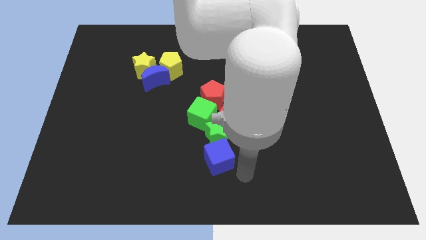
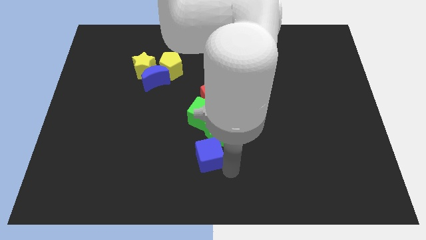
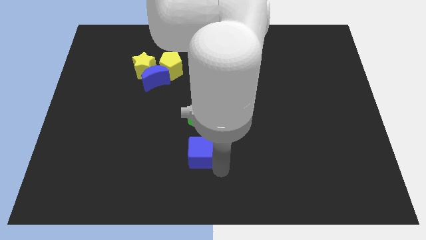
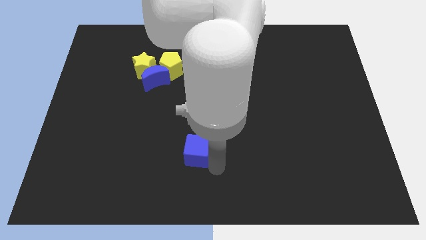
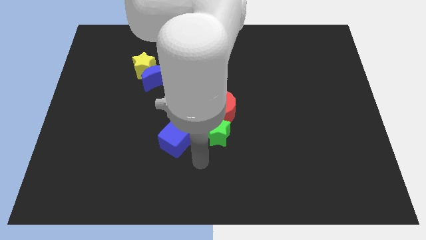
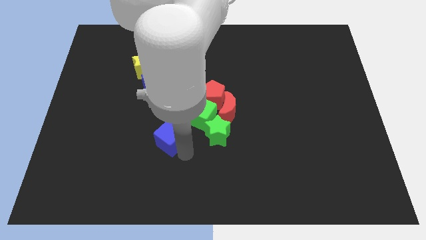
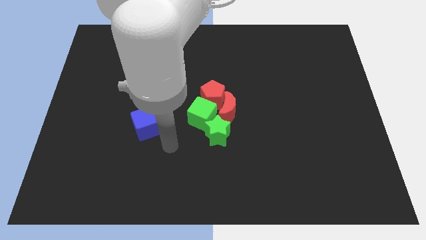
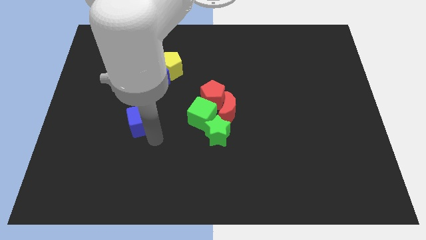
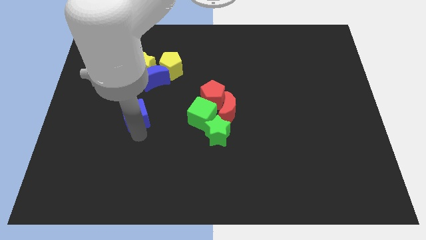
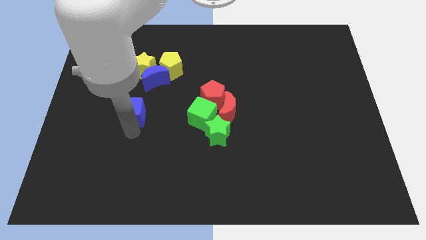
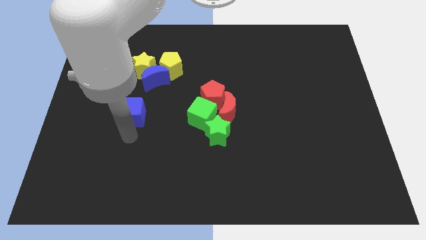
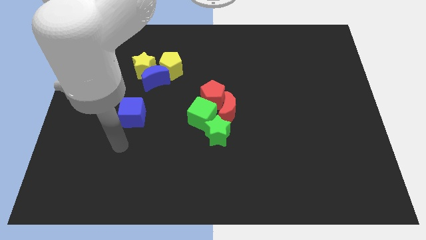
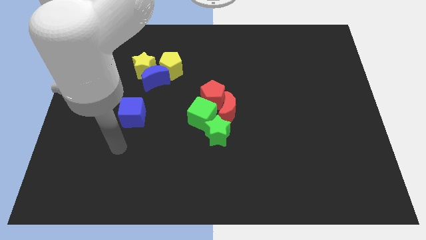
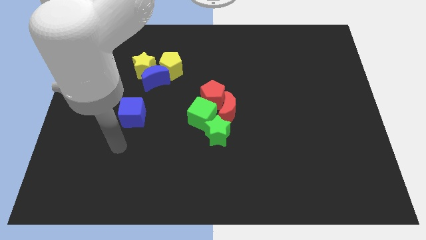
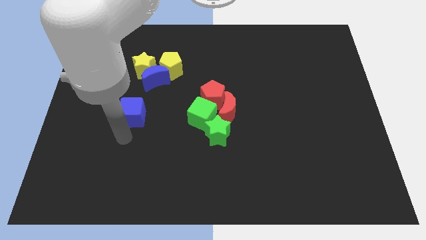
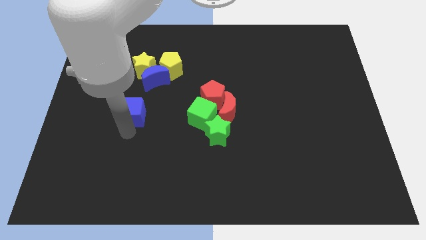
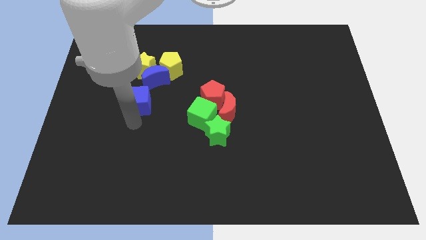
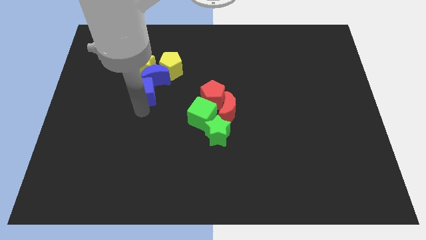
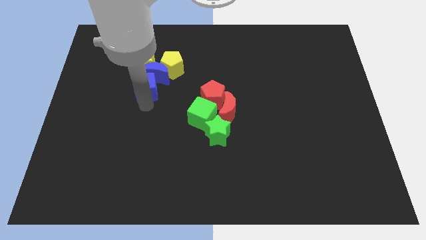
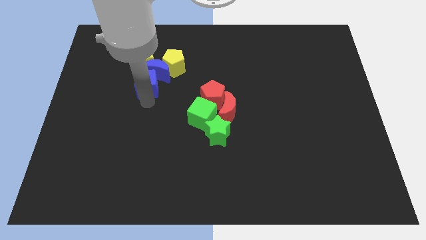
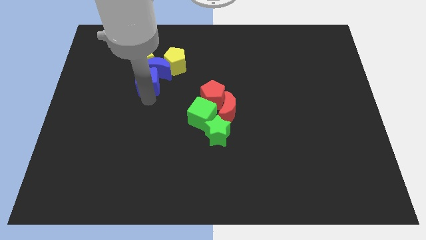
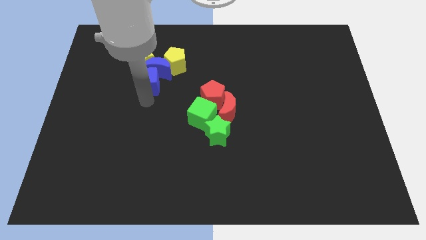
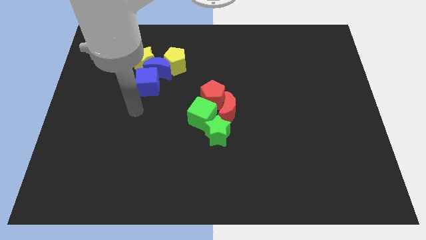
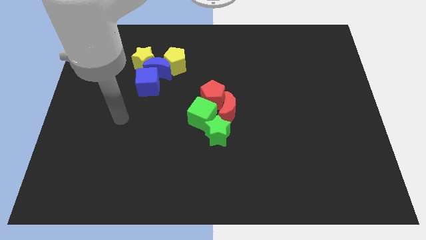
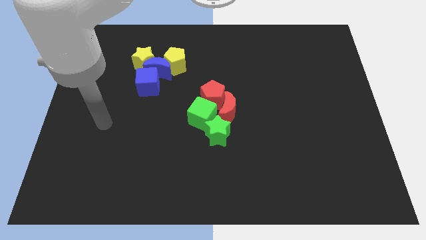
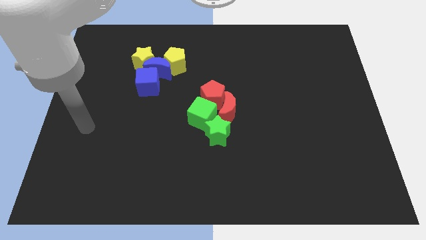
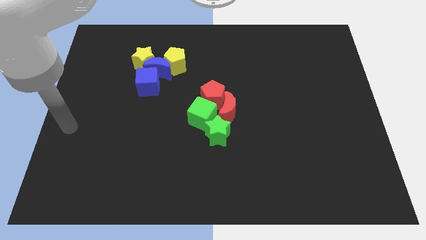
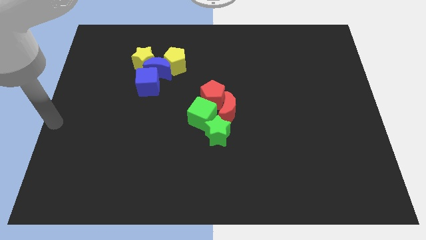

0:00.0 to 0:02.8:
move the blue cube close to the blue moon

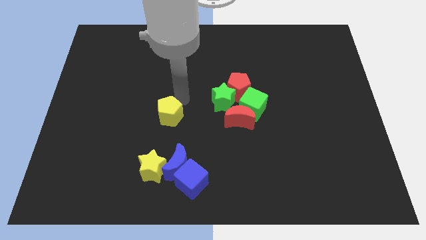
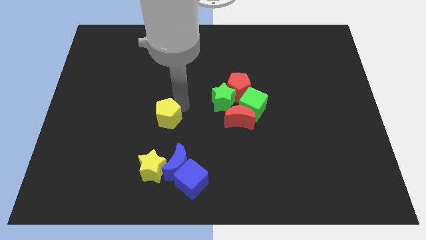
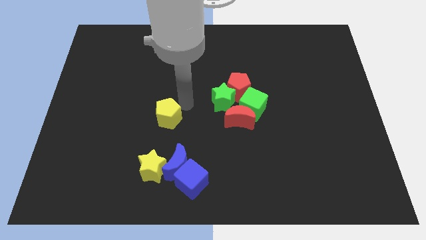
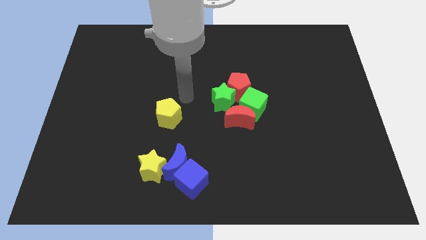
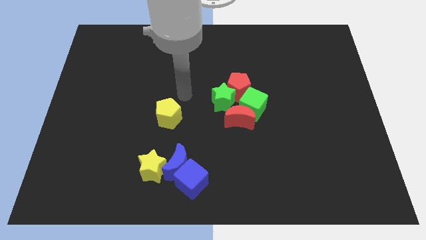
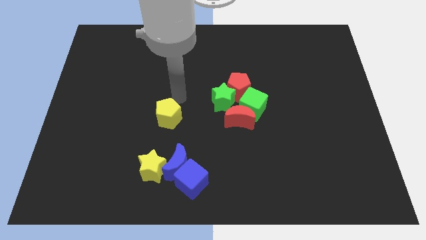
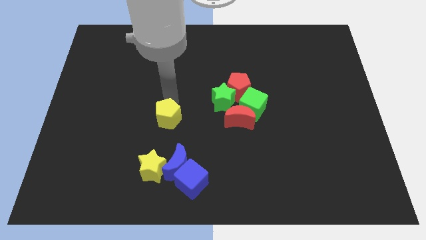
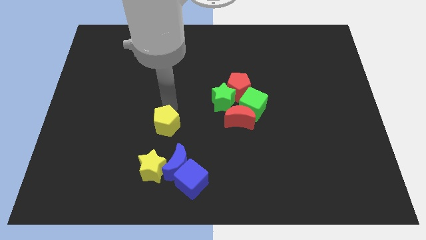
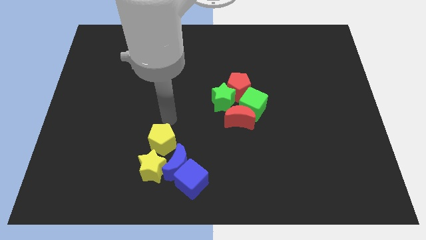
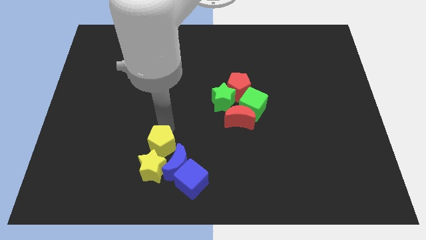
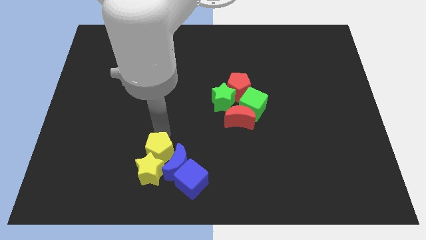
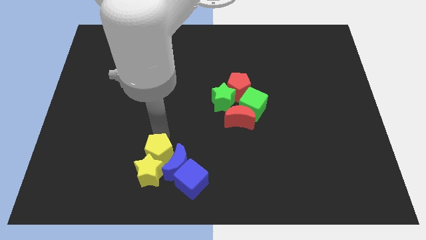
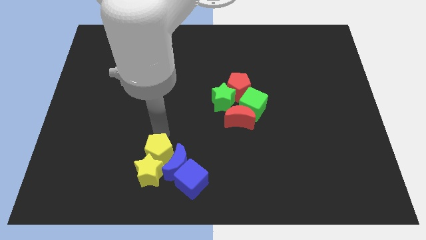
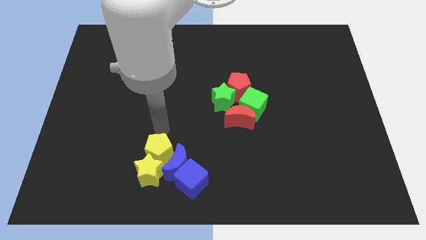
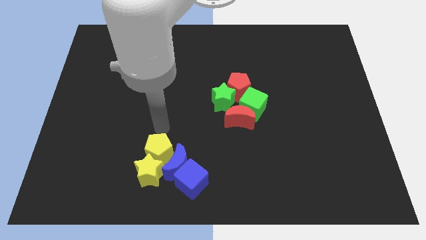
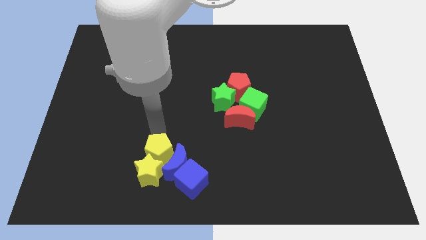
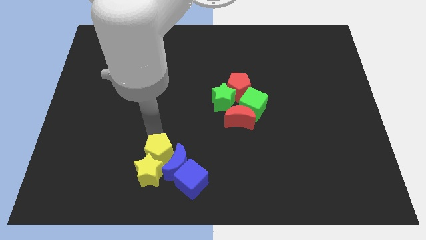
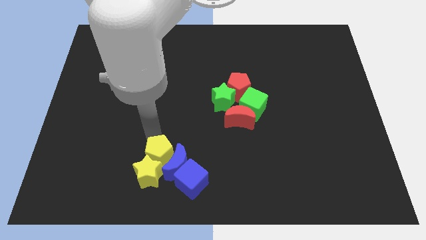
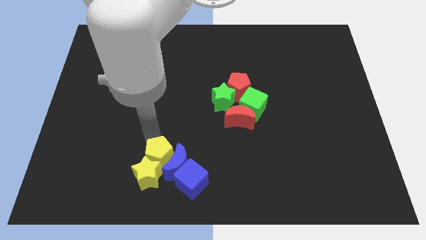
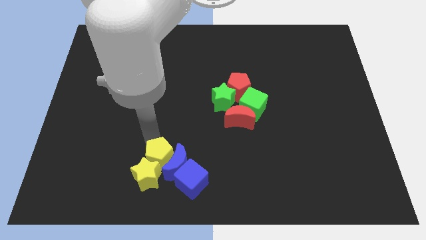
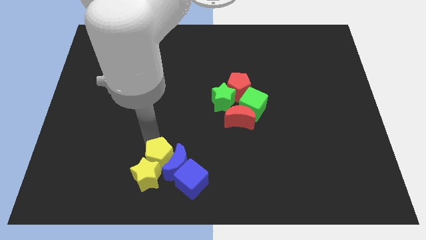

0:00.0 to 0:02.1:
move yellow pentagon into group of blocks

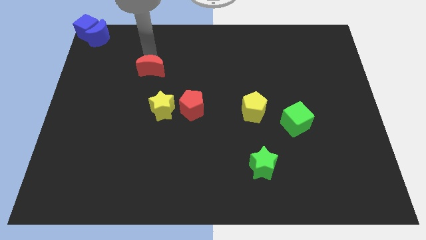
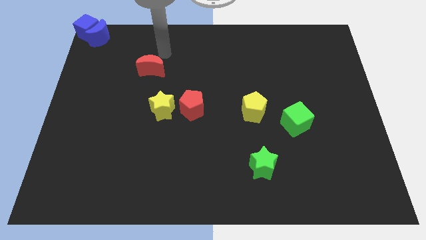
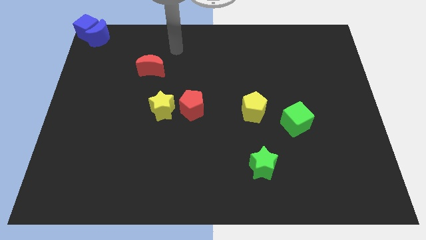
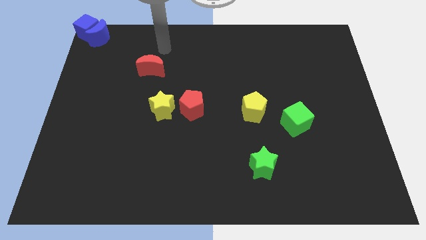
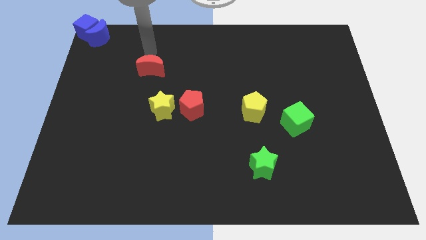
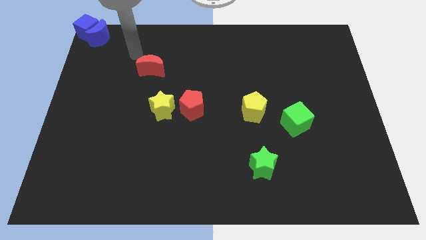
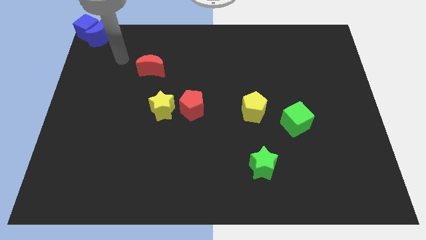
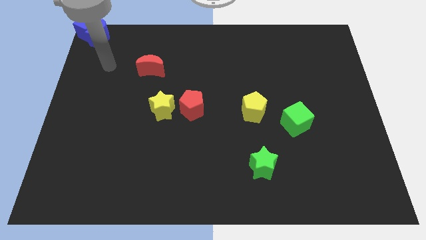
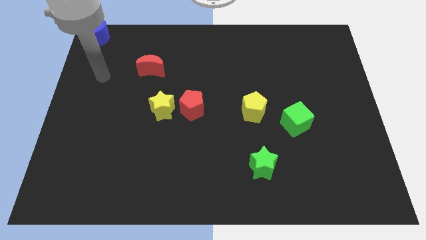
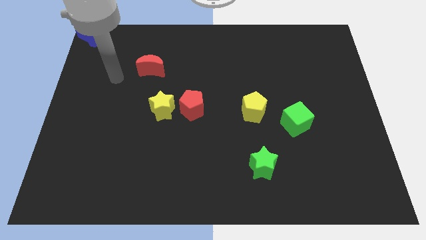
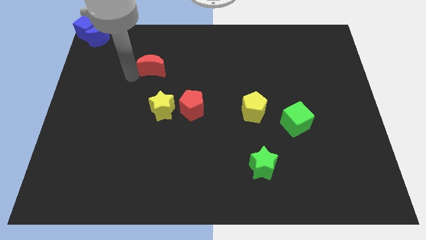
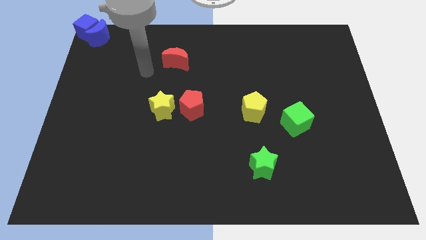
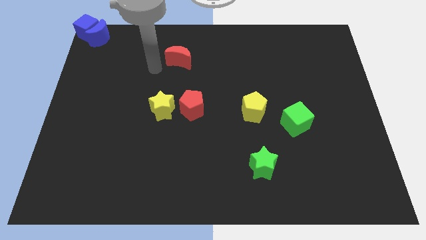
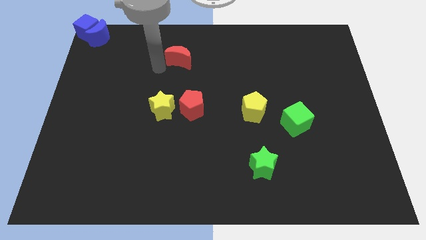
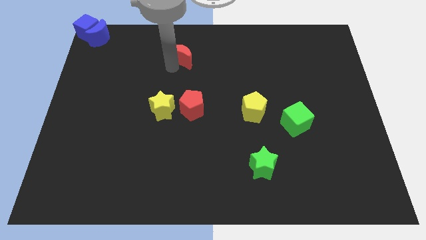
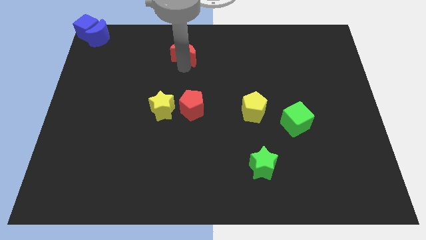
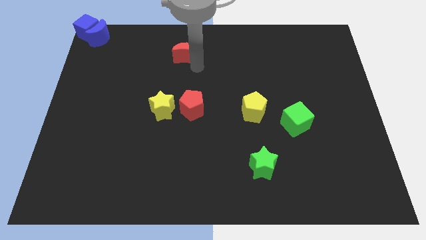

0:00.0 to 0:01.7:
slide the red moon on the top of the red pentagon vertically

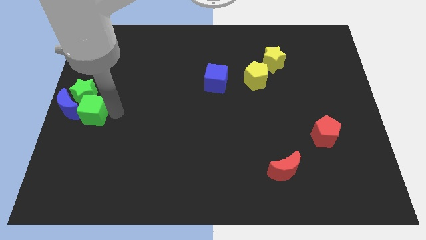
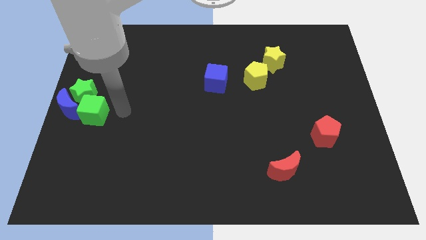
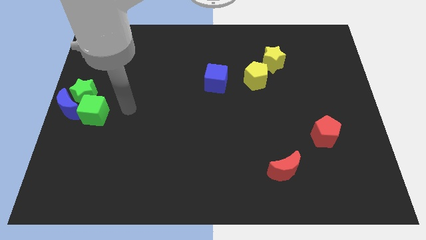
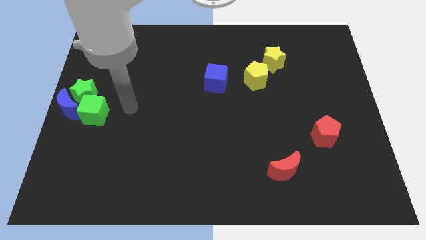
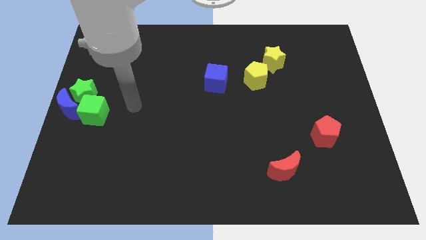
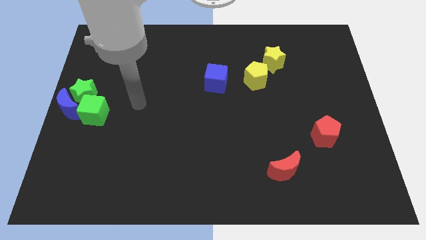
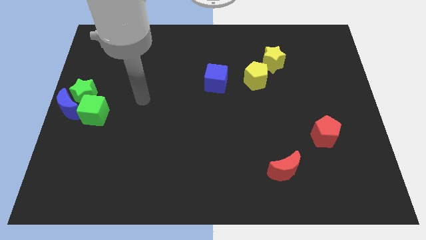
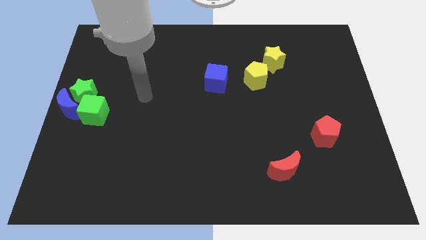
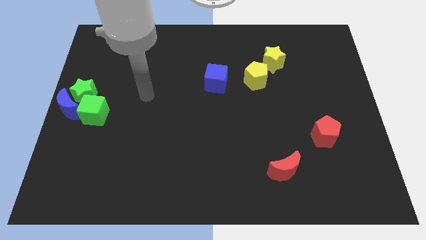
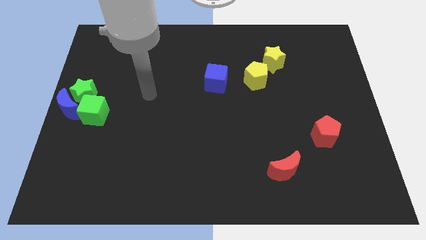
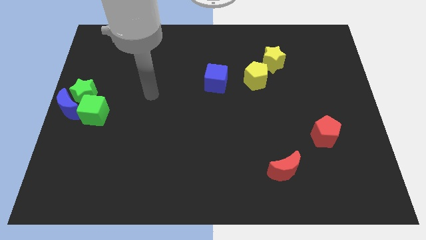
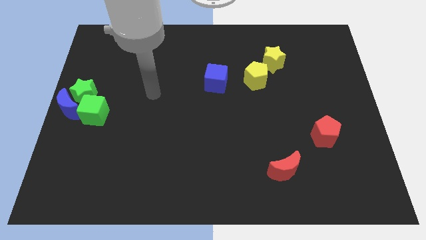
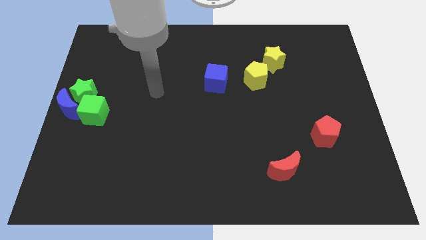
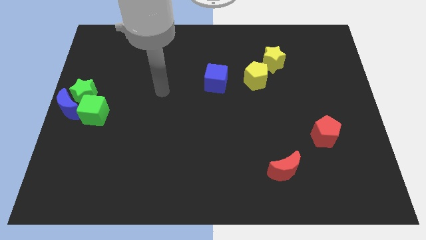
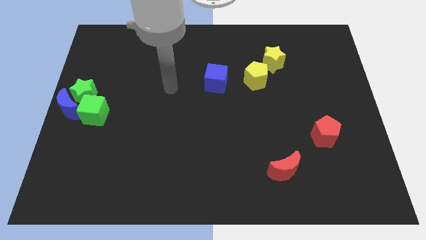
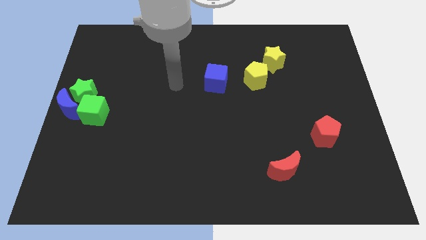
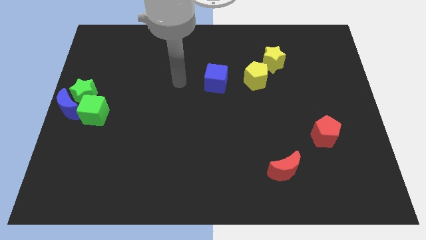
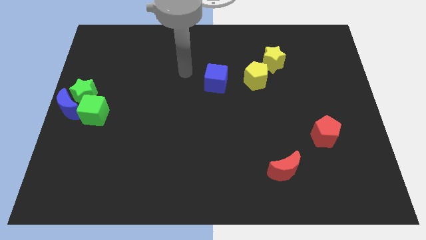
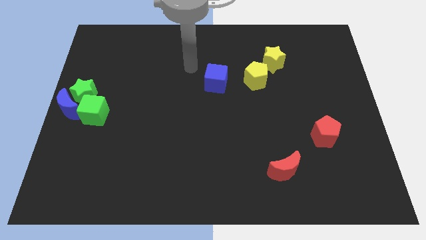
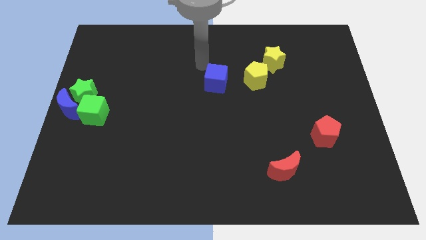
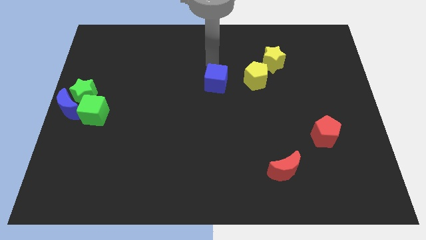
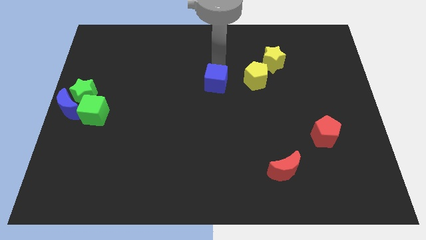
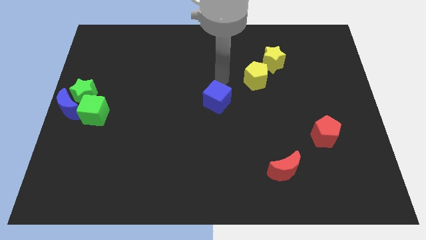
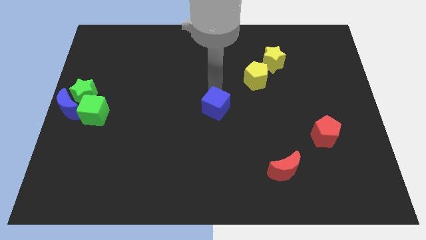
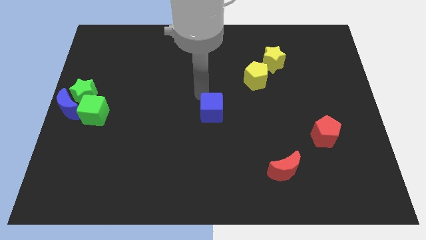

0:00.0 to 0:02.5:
place the blue cube to the center of the board
